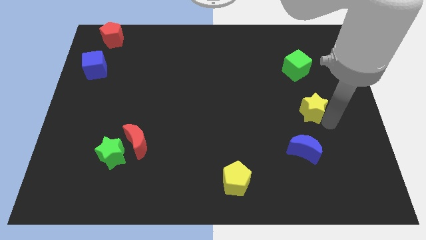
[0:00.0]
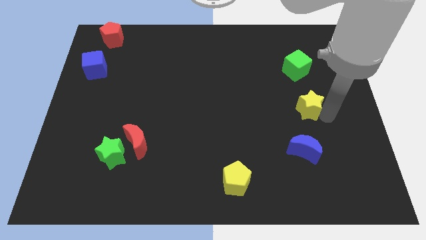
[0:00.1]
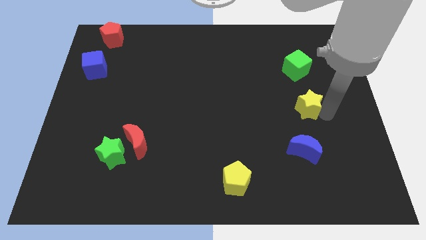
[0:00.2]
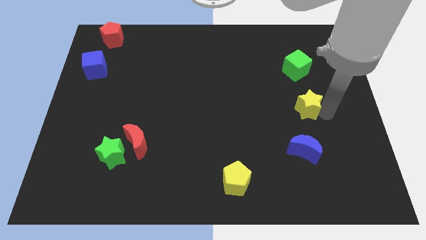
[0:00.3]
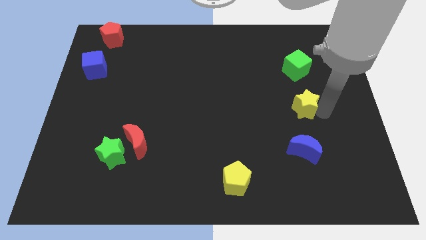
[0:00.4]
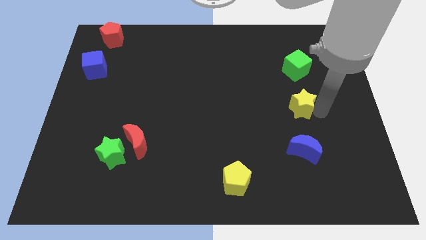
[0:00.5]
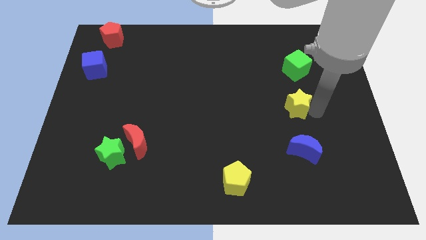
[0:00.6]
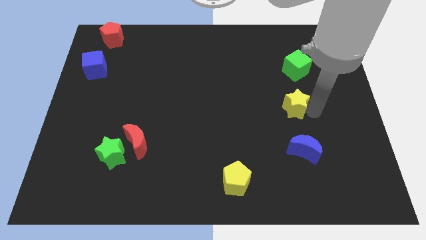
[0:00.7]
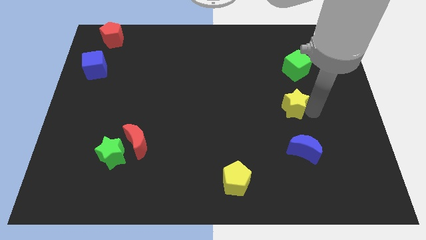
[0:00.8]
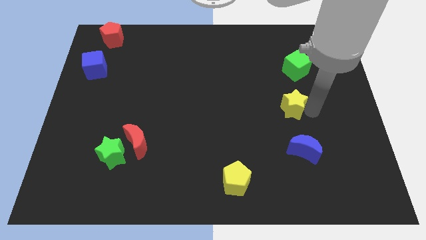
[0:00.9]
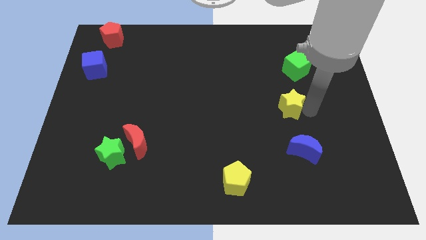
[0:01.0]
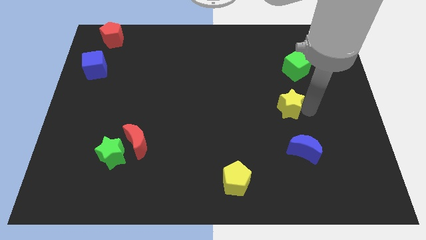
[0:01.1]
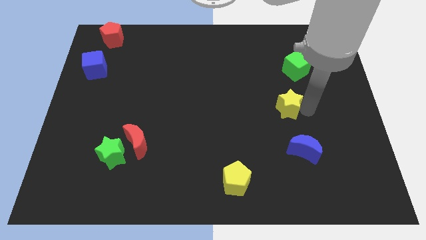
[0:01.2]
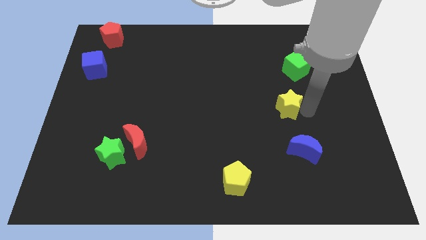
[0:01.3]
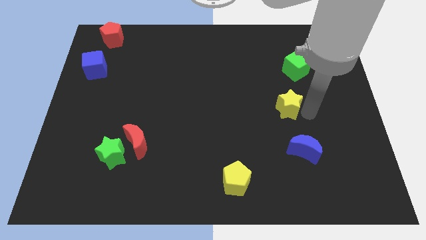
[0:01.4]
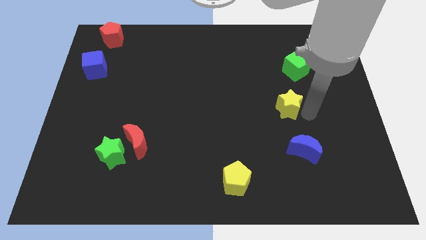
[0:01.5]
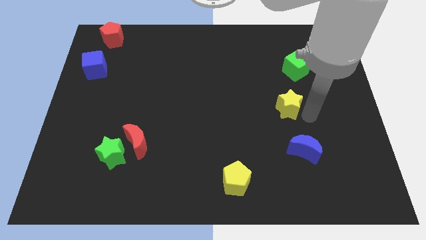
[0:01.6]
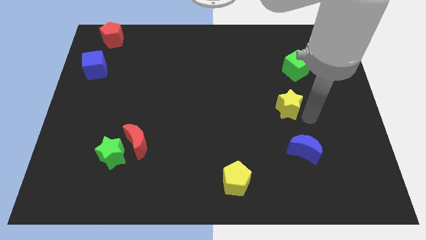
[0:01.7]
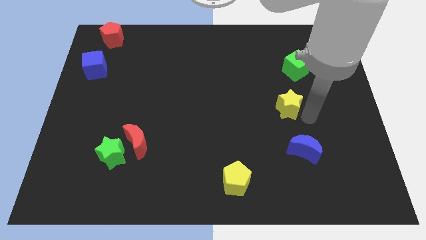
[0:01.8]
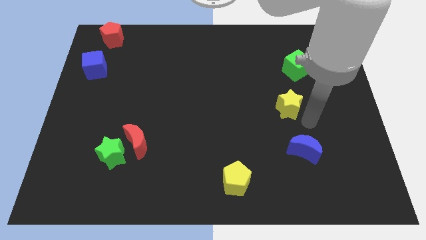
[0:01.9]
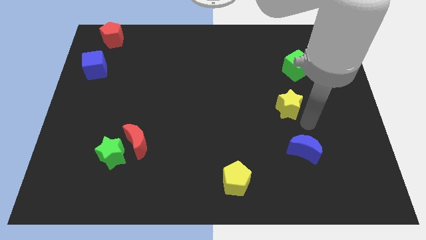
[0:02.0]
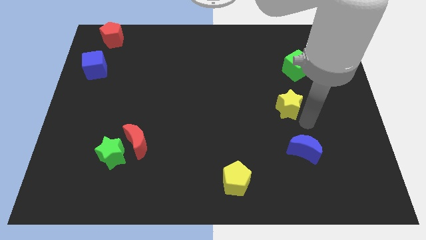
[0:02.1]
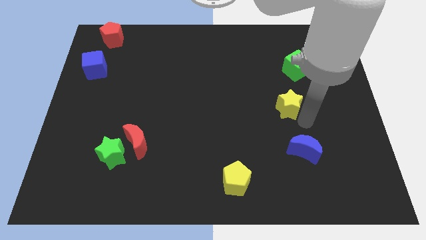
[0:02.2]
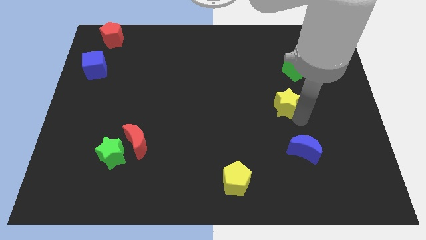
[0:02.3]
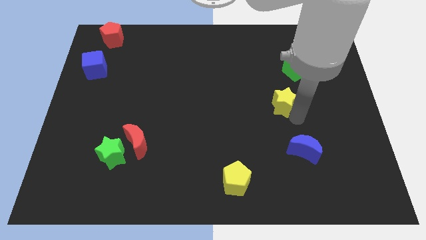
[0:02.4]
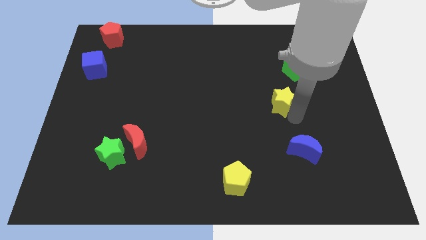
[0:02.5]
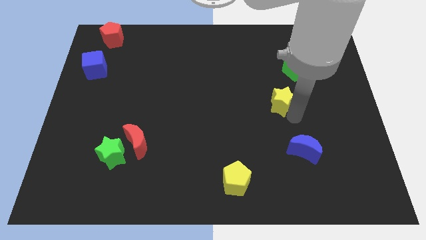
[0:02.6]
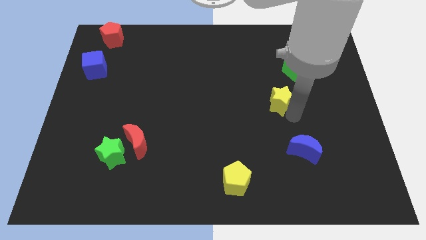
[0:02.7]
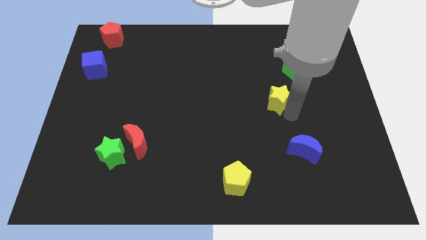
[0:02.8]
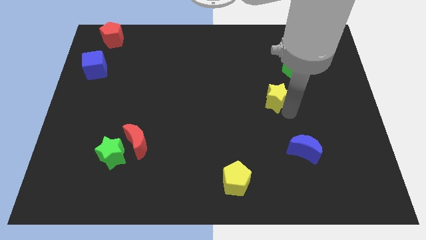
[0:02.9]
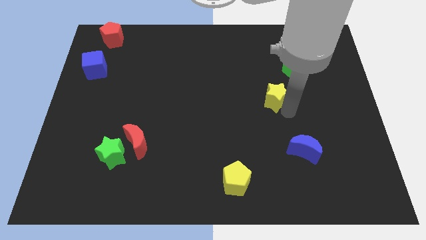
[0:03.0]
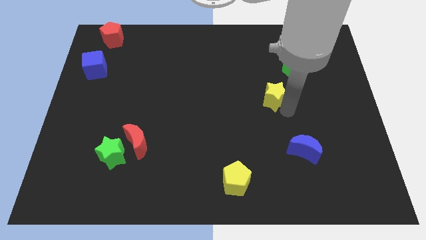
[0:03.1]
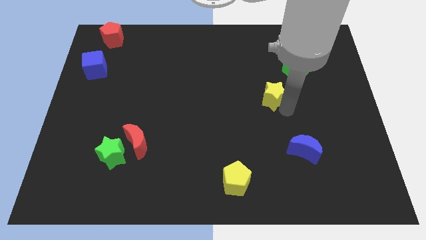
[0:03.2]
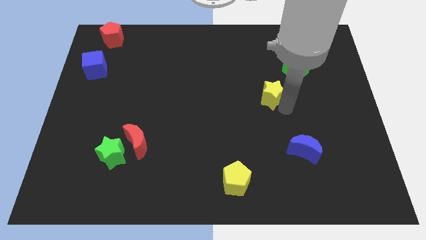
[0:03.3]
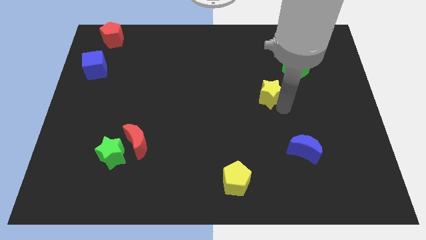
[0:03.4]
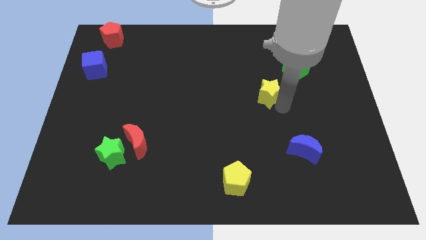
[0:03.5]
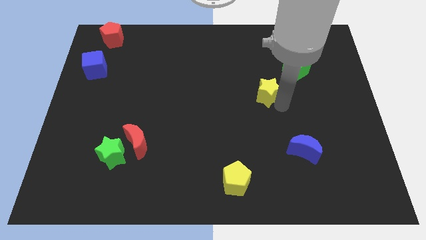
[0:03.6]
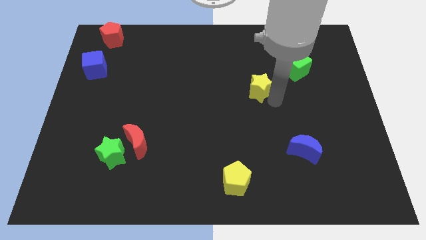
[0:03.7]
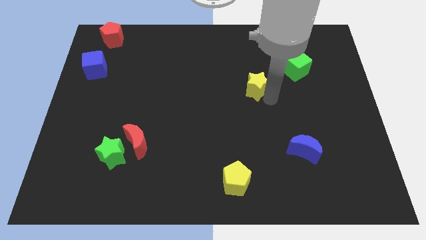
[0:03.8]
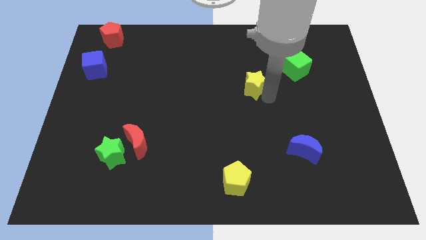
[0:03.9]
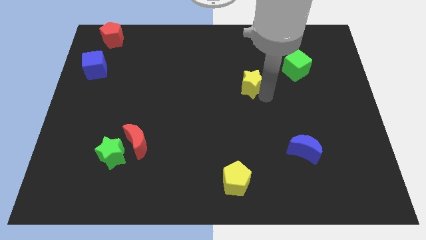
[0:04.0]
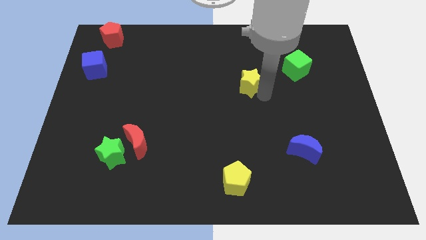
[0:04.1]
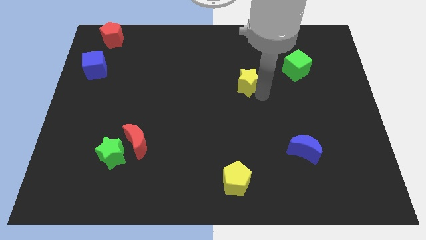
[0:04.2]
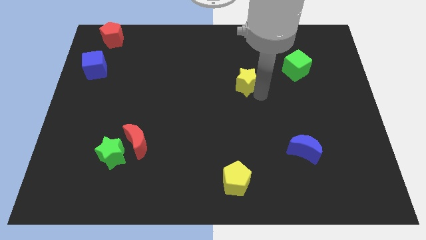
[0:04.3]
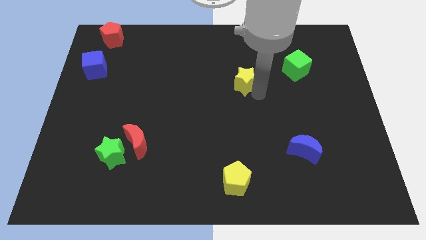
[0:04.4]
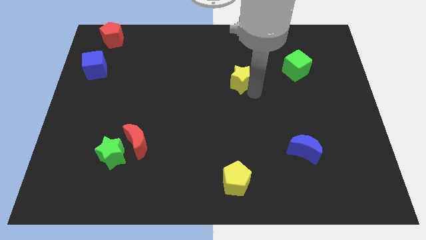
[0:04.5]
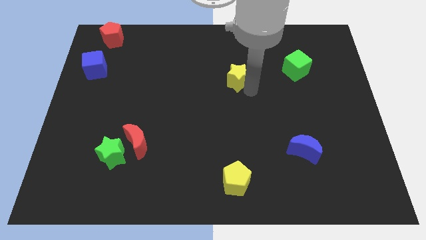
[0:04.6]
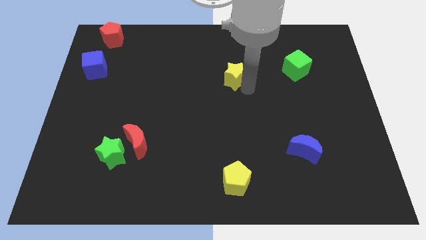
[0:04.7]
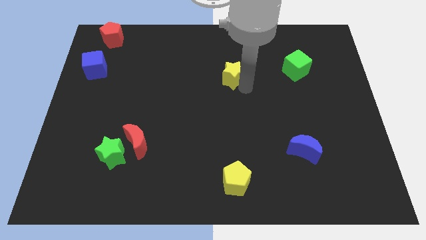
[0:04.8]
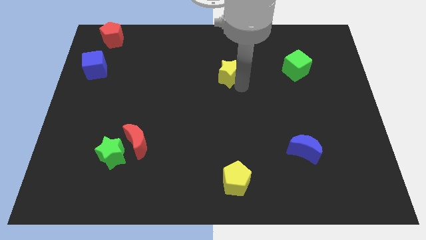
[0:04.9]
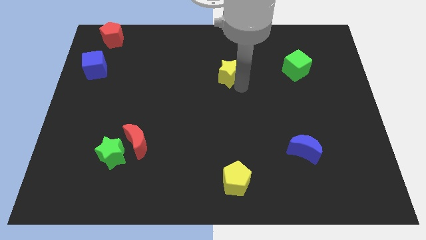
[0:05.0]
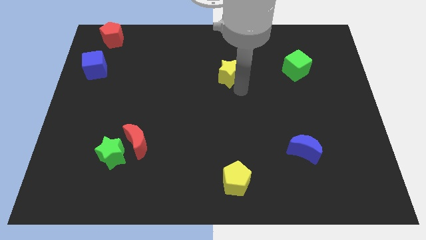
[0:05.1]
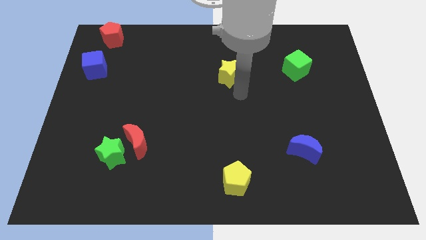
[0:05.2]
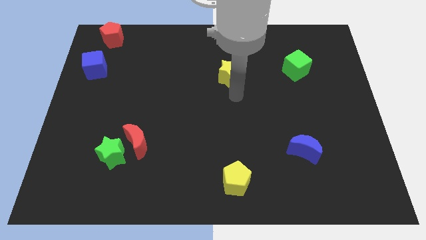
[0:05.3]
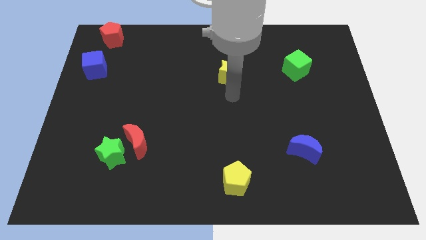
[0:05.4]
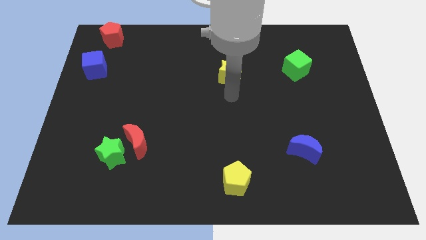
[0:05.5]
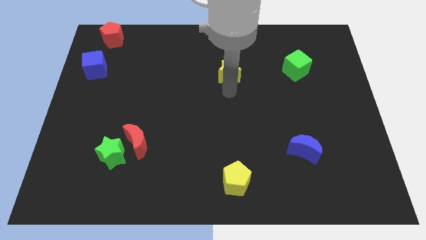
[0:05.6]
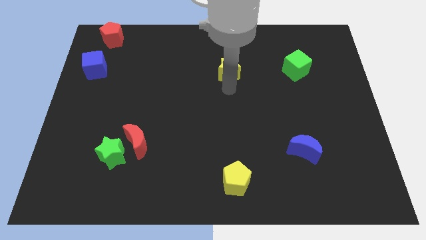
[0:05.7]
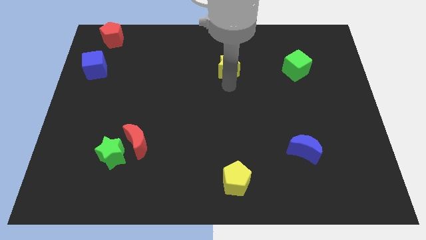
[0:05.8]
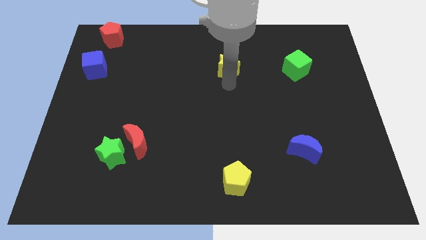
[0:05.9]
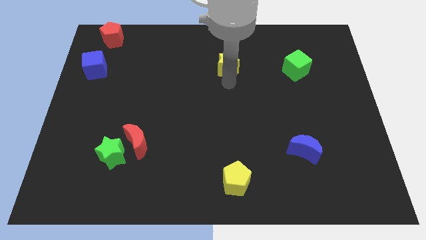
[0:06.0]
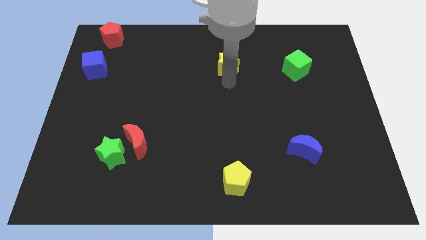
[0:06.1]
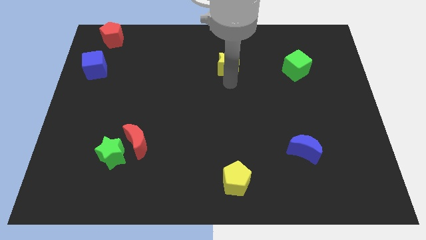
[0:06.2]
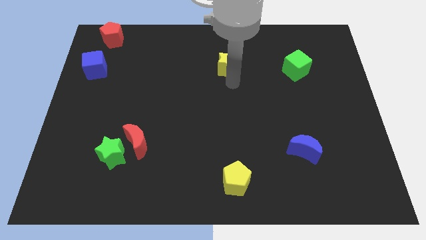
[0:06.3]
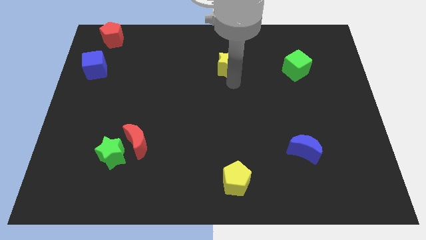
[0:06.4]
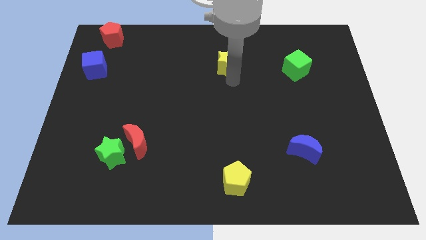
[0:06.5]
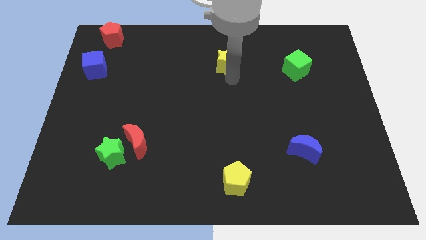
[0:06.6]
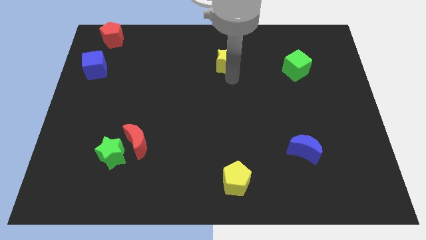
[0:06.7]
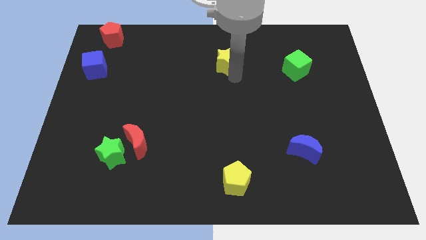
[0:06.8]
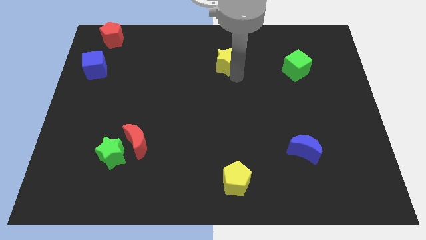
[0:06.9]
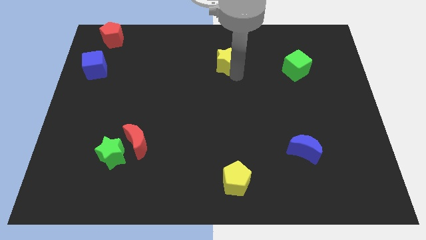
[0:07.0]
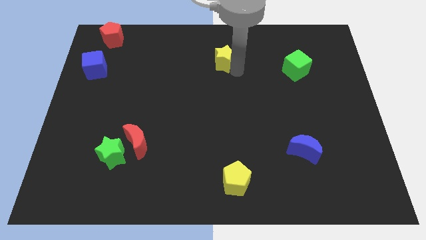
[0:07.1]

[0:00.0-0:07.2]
place yellow star parallel to blue cube

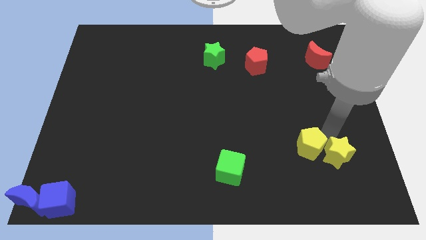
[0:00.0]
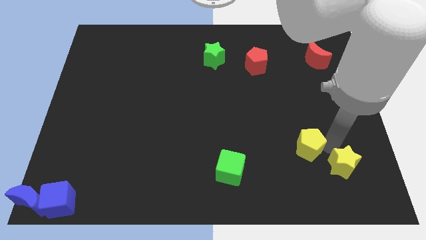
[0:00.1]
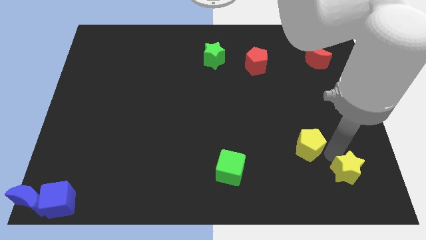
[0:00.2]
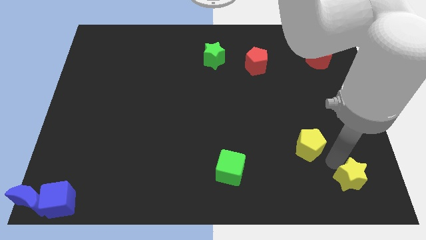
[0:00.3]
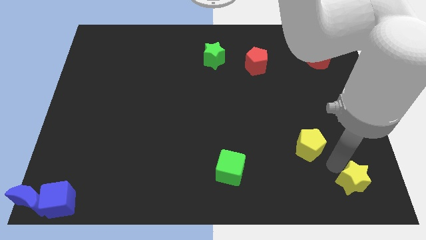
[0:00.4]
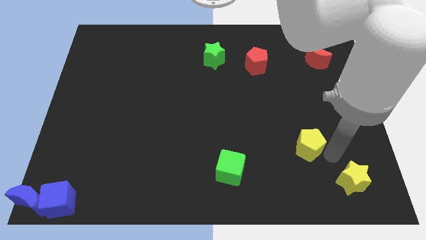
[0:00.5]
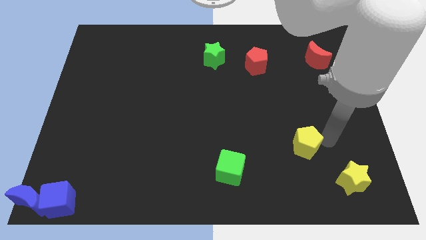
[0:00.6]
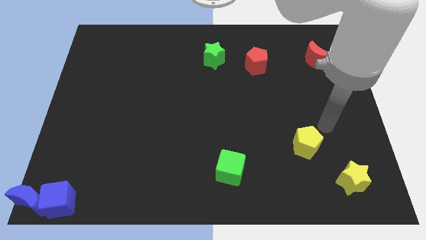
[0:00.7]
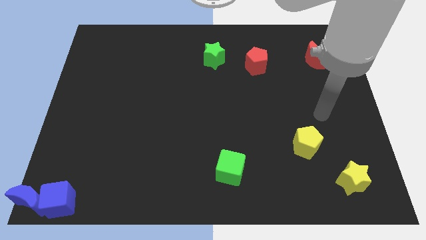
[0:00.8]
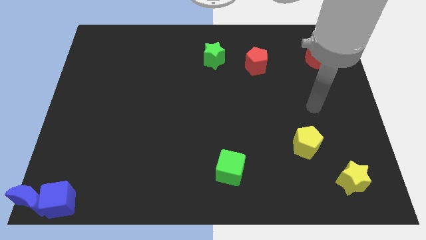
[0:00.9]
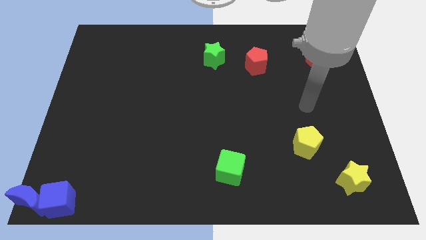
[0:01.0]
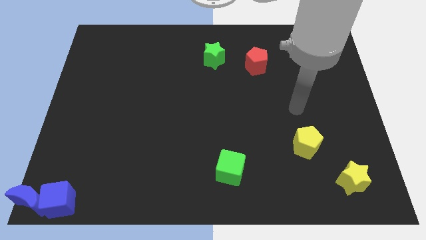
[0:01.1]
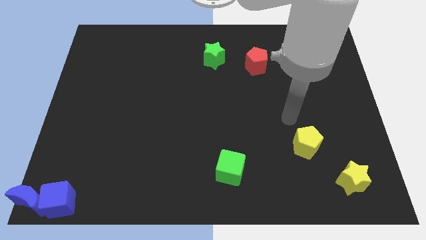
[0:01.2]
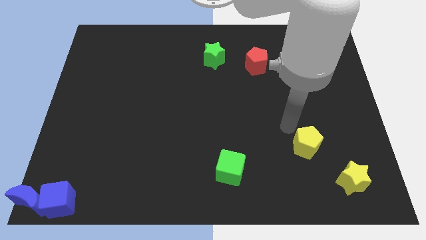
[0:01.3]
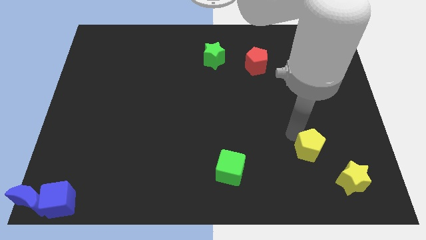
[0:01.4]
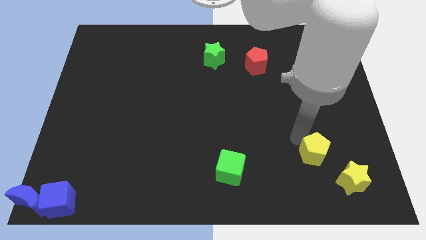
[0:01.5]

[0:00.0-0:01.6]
separate the yellow blocks

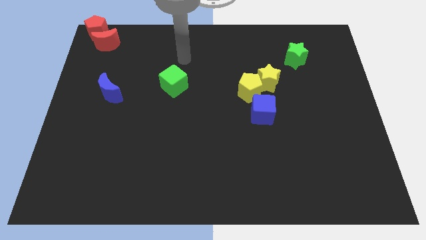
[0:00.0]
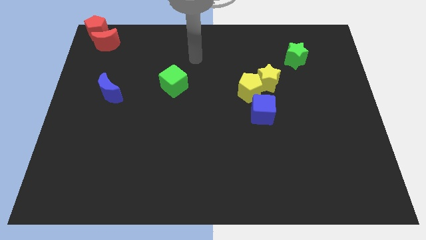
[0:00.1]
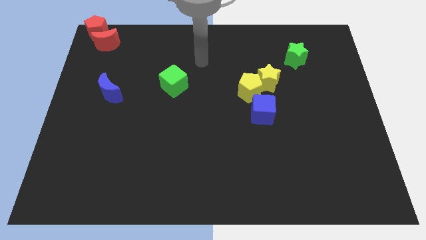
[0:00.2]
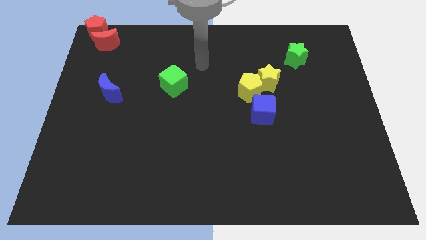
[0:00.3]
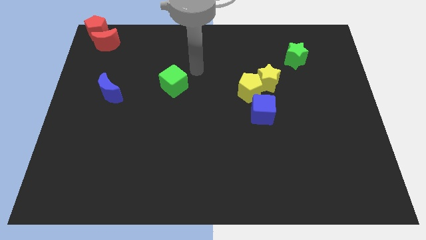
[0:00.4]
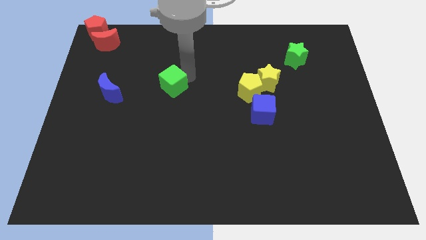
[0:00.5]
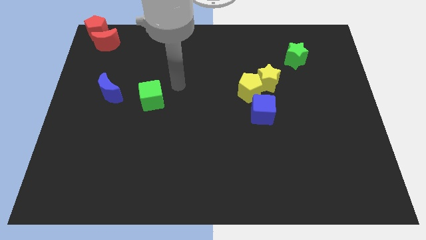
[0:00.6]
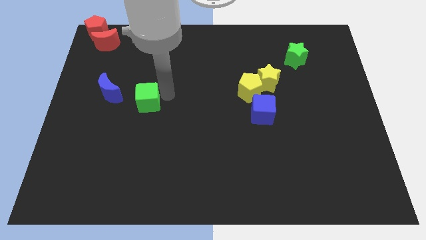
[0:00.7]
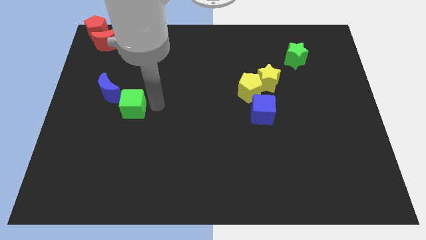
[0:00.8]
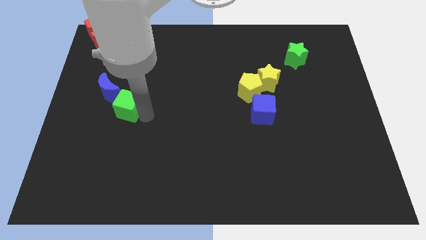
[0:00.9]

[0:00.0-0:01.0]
push the green cube to the right of the blue crescent
